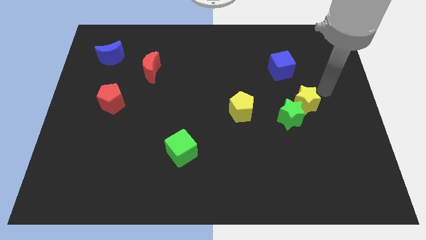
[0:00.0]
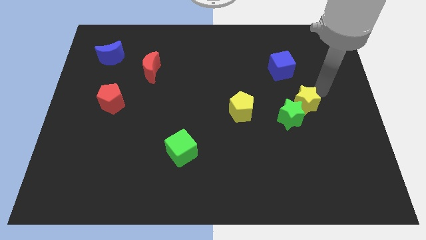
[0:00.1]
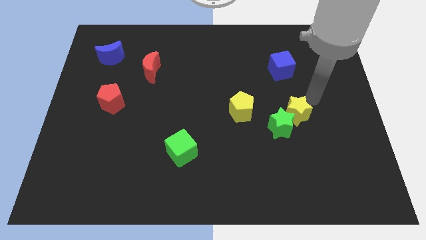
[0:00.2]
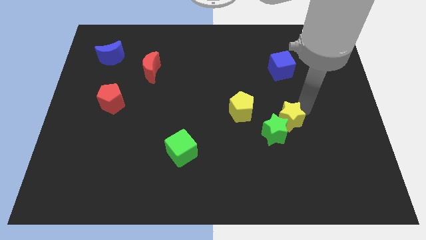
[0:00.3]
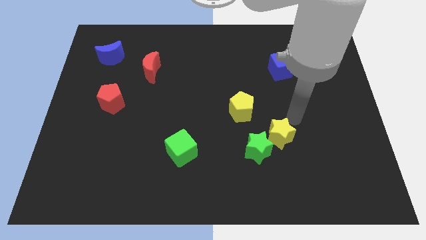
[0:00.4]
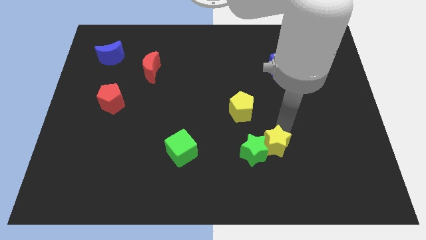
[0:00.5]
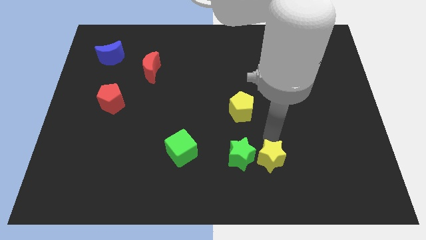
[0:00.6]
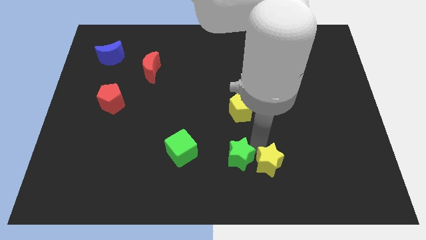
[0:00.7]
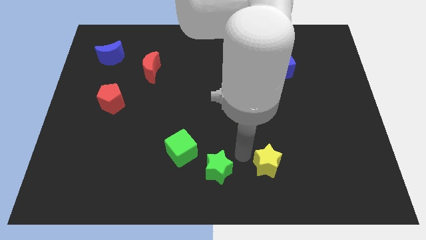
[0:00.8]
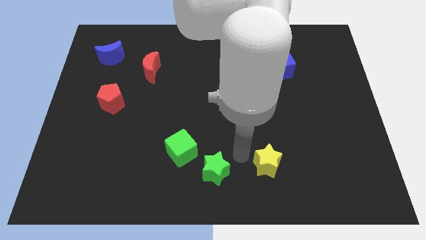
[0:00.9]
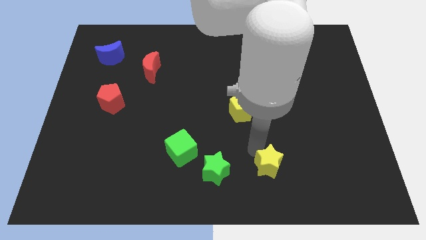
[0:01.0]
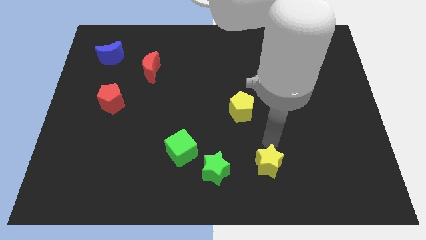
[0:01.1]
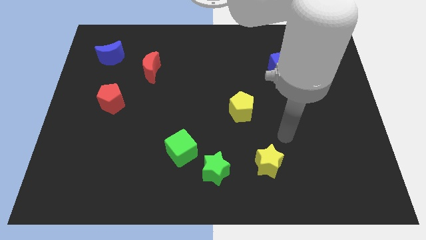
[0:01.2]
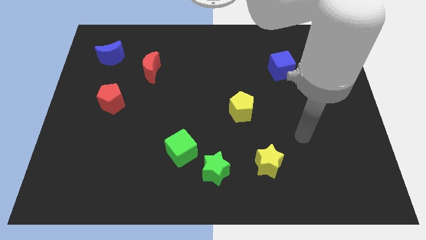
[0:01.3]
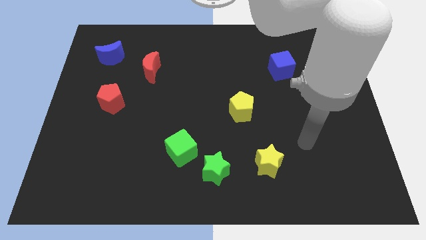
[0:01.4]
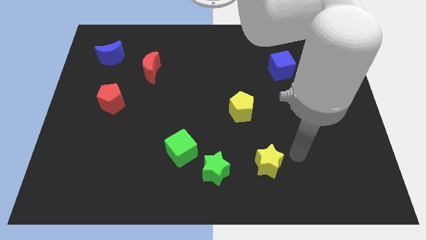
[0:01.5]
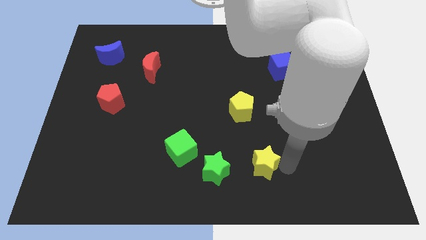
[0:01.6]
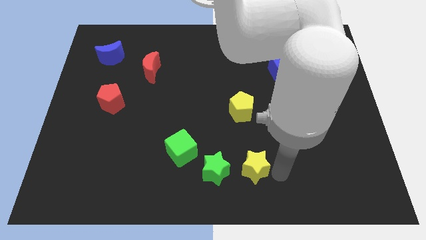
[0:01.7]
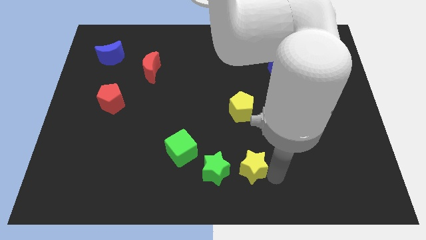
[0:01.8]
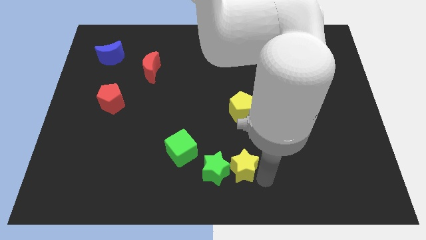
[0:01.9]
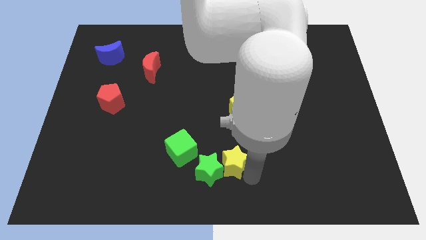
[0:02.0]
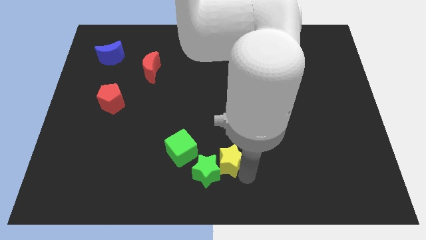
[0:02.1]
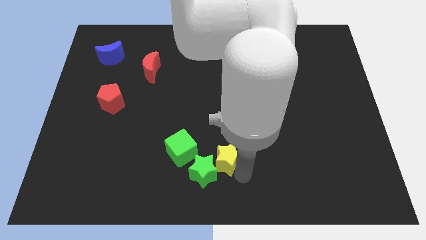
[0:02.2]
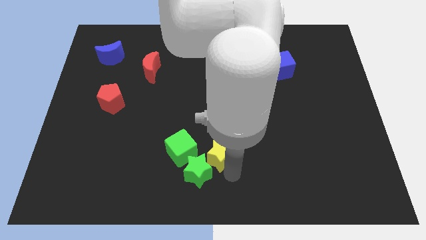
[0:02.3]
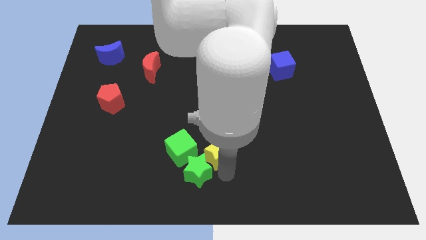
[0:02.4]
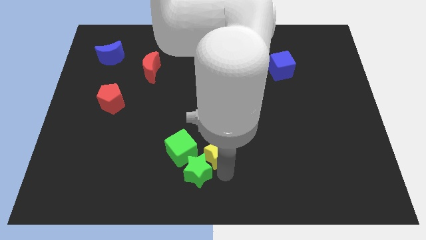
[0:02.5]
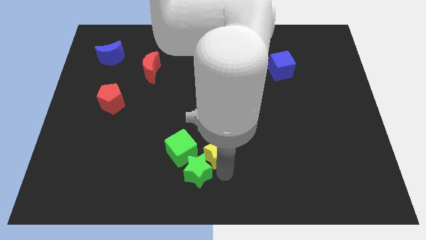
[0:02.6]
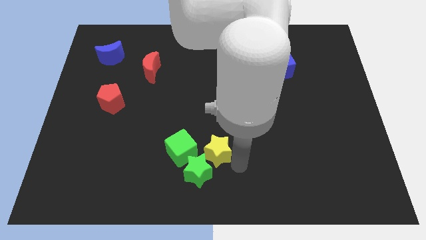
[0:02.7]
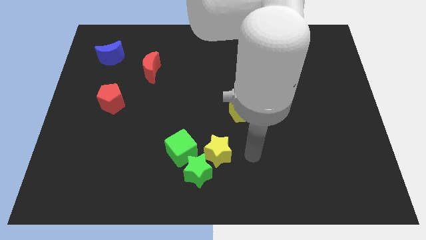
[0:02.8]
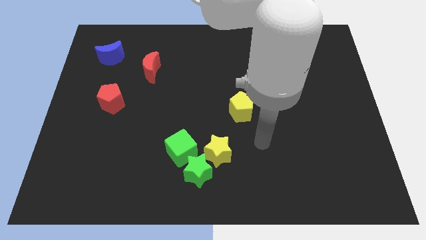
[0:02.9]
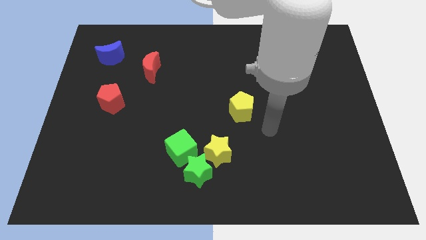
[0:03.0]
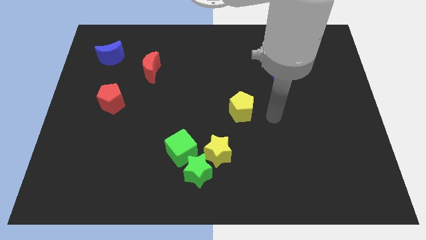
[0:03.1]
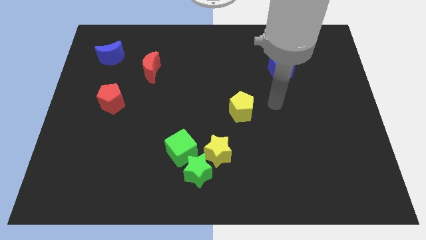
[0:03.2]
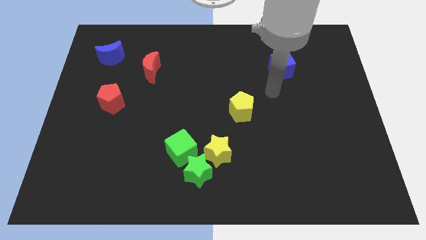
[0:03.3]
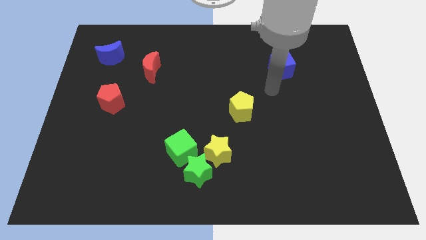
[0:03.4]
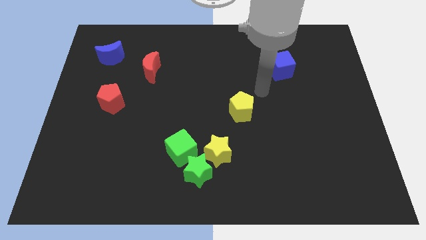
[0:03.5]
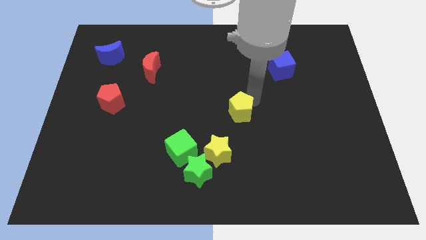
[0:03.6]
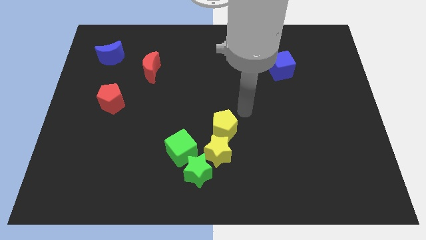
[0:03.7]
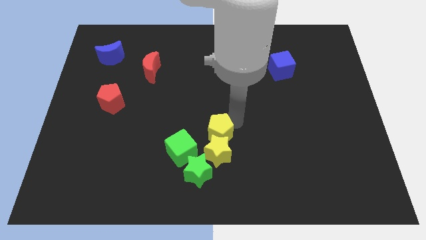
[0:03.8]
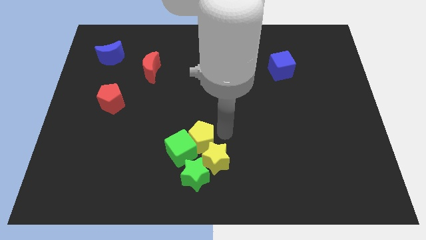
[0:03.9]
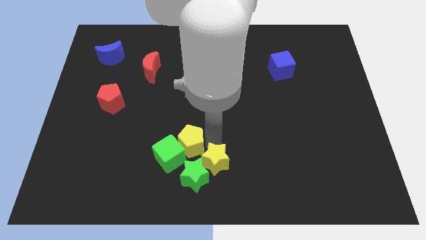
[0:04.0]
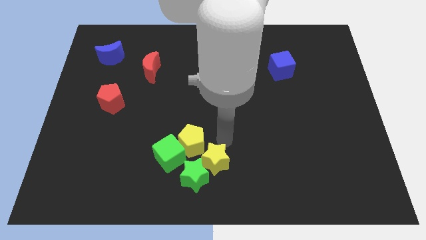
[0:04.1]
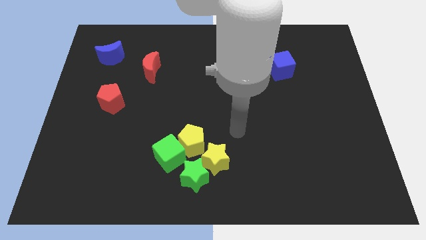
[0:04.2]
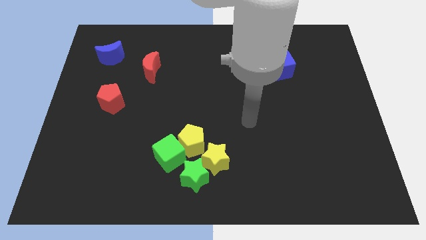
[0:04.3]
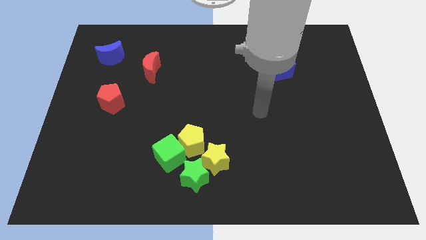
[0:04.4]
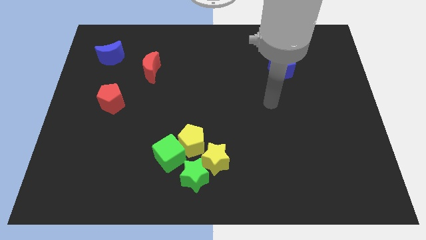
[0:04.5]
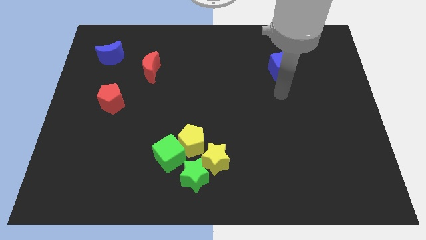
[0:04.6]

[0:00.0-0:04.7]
make a group of blocks with the stars and yellow pentagon and green cube

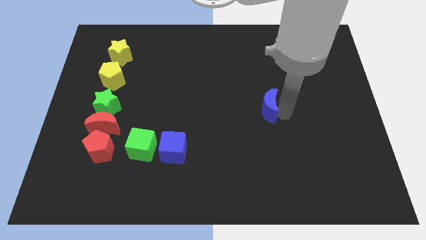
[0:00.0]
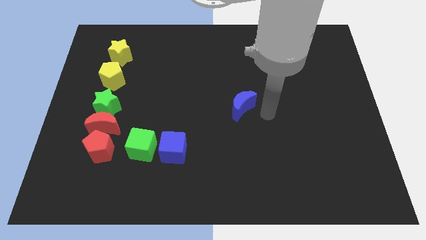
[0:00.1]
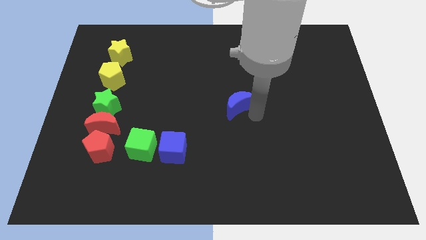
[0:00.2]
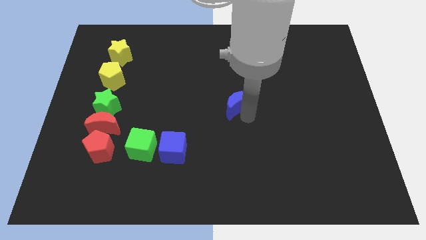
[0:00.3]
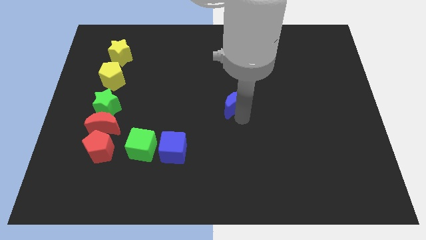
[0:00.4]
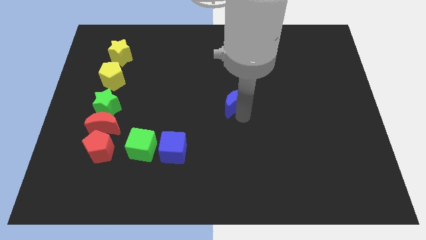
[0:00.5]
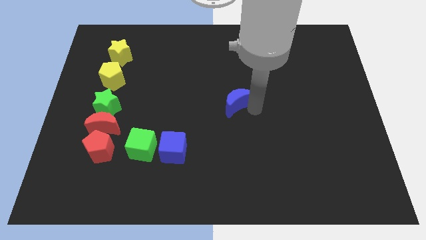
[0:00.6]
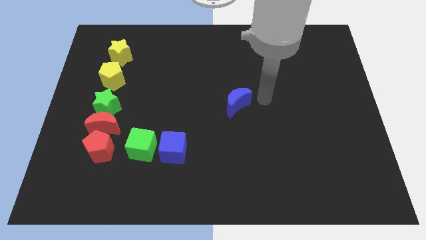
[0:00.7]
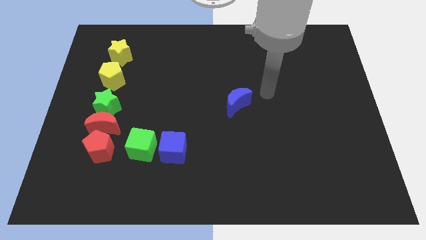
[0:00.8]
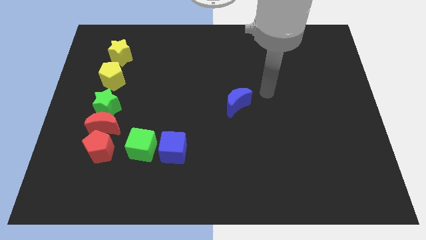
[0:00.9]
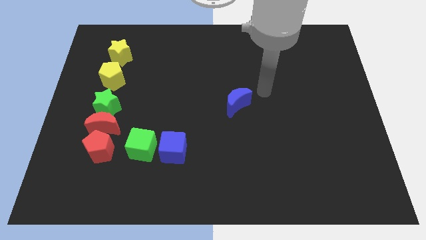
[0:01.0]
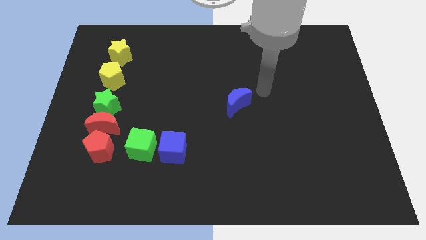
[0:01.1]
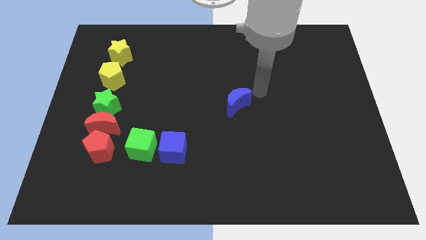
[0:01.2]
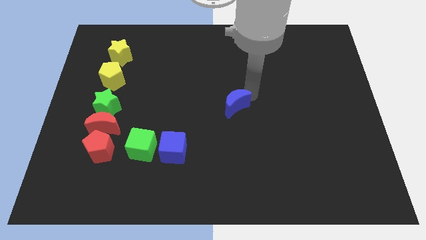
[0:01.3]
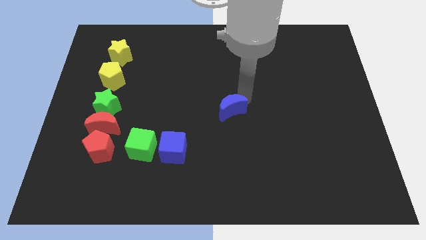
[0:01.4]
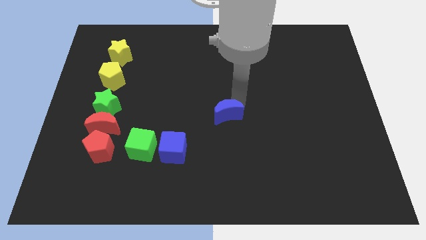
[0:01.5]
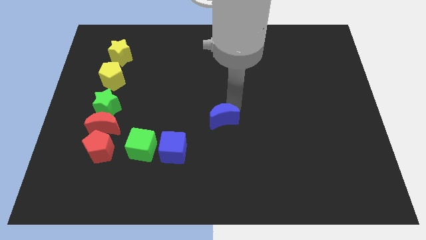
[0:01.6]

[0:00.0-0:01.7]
move the blue crescent towards the blue cube

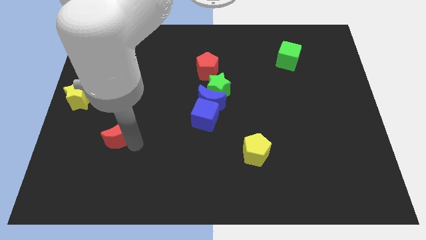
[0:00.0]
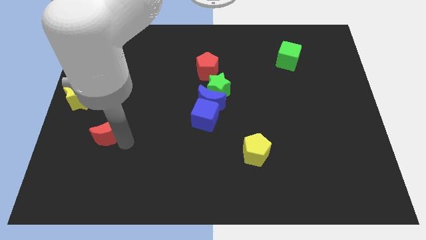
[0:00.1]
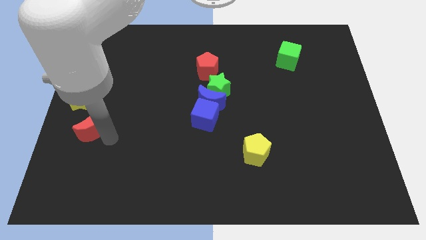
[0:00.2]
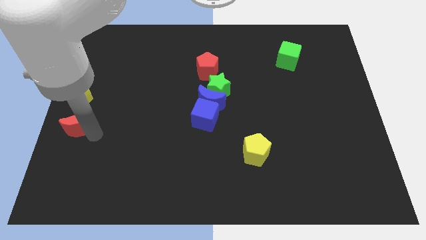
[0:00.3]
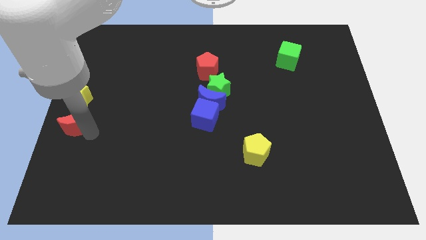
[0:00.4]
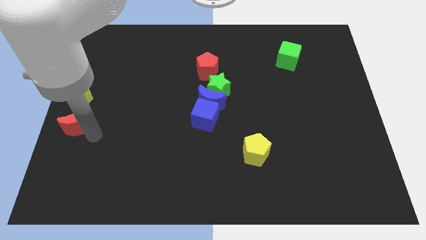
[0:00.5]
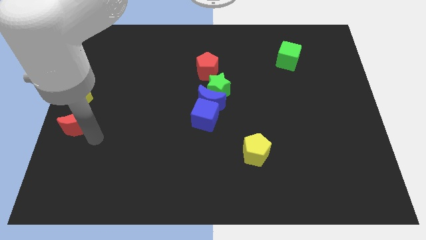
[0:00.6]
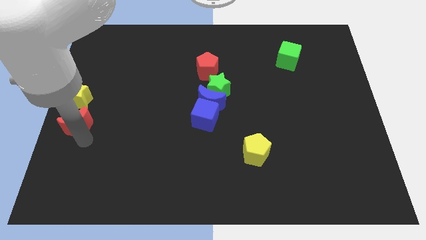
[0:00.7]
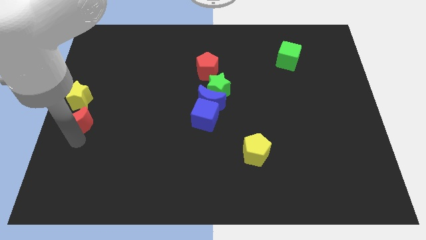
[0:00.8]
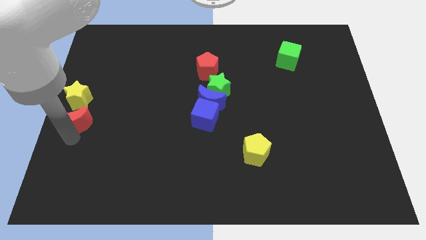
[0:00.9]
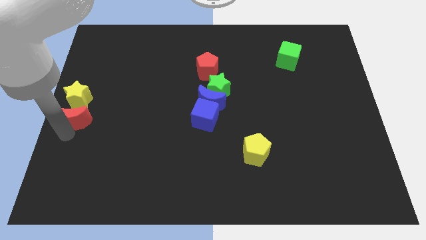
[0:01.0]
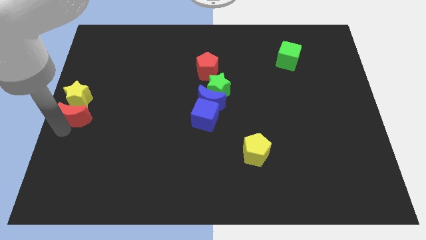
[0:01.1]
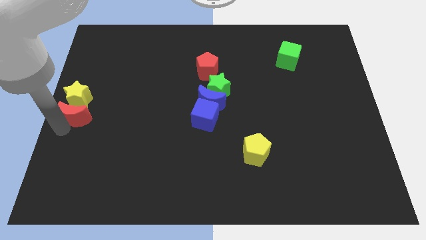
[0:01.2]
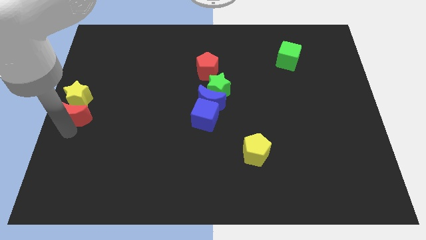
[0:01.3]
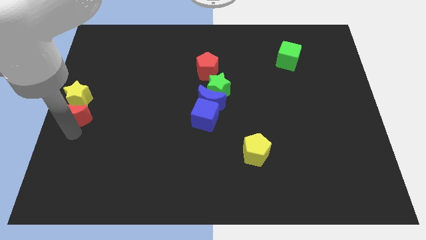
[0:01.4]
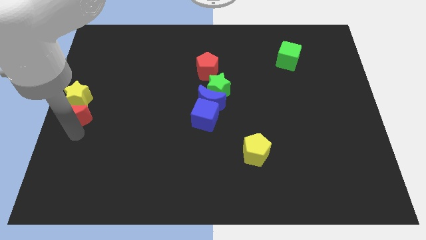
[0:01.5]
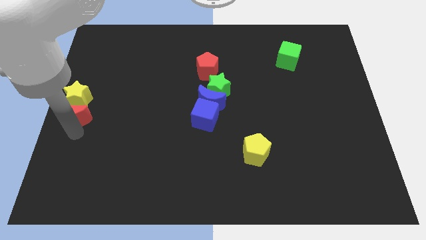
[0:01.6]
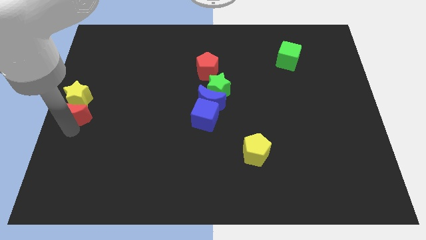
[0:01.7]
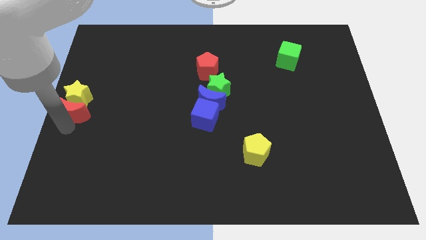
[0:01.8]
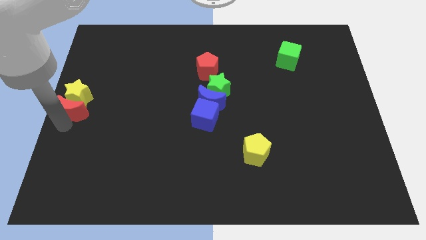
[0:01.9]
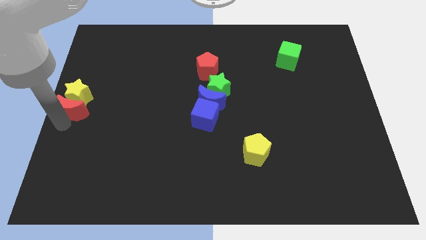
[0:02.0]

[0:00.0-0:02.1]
move the red moon into the yellow star

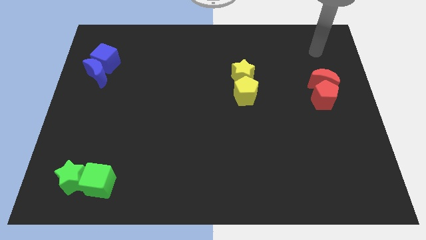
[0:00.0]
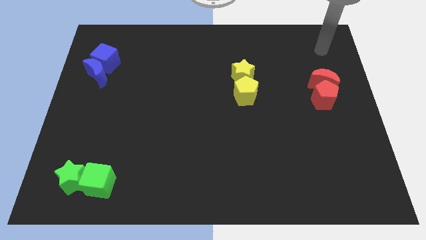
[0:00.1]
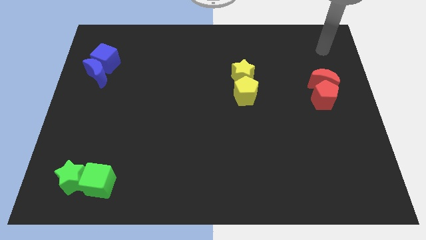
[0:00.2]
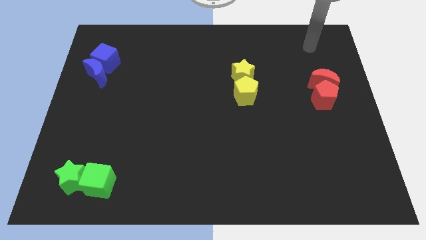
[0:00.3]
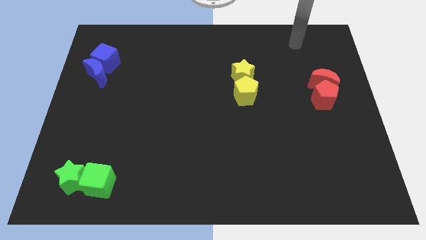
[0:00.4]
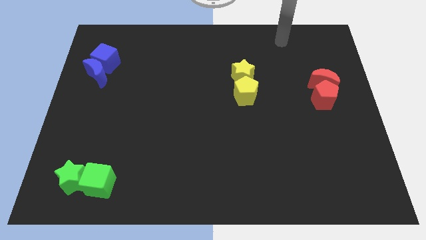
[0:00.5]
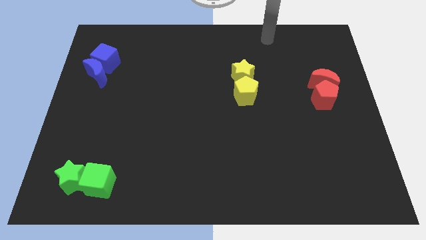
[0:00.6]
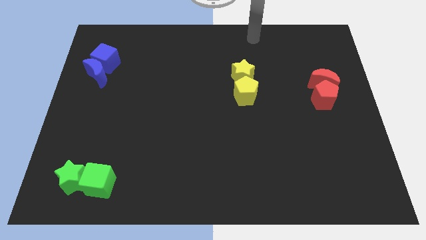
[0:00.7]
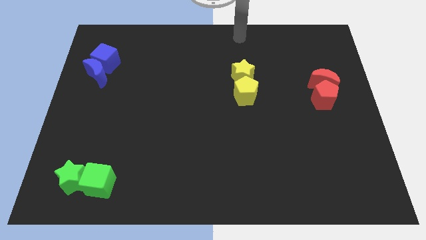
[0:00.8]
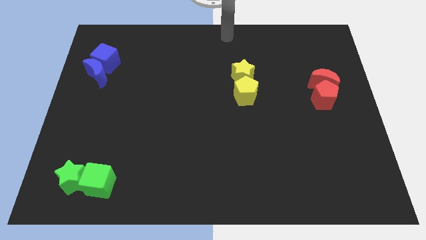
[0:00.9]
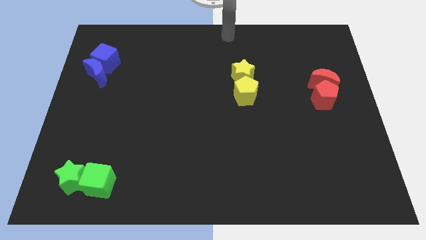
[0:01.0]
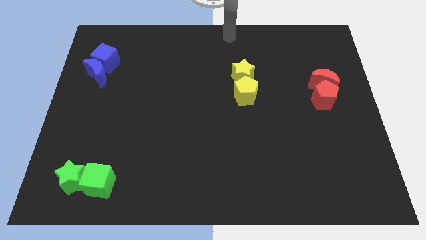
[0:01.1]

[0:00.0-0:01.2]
move your arm to the top center
